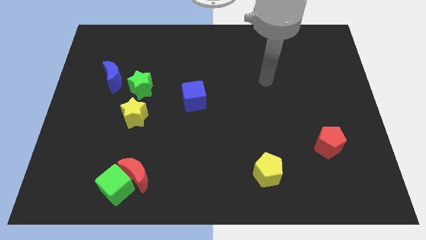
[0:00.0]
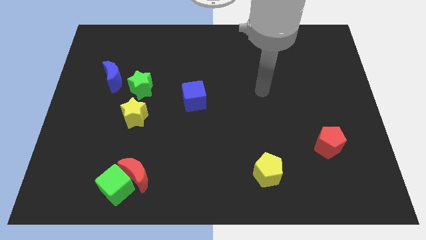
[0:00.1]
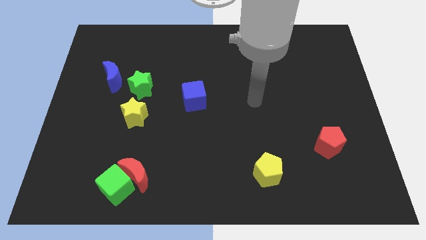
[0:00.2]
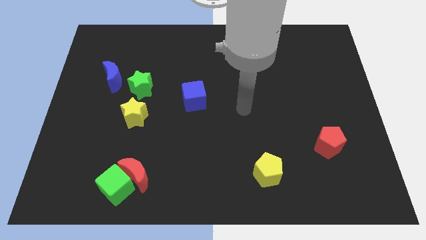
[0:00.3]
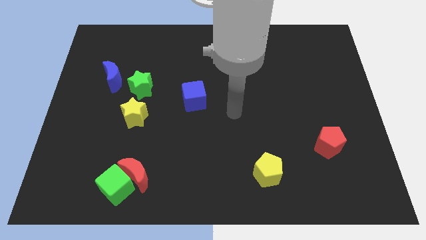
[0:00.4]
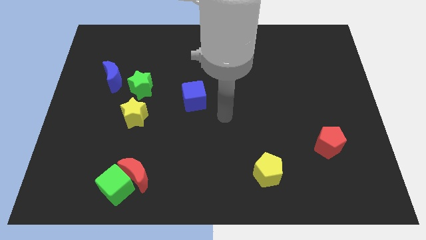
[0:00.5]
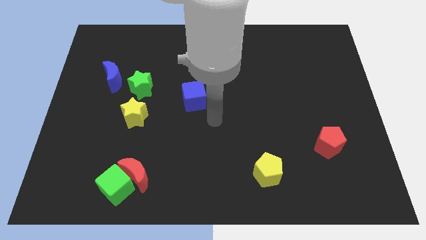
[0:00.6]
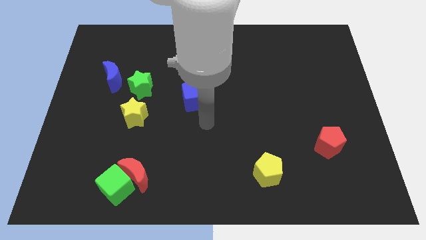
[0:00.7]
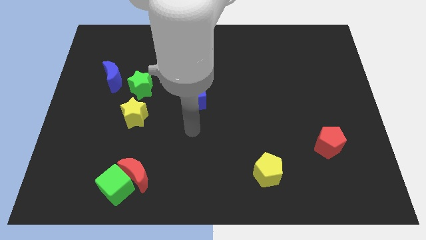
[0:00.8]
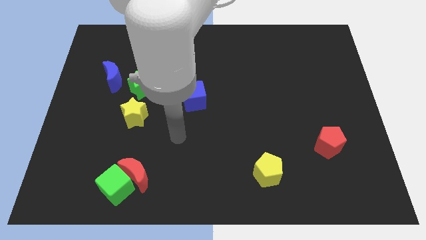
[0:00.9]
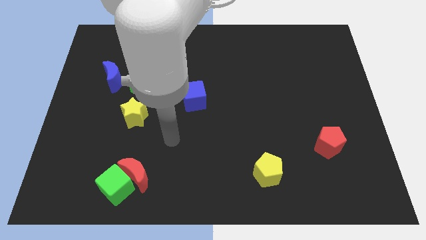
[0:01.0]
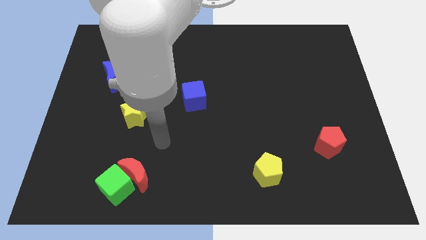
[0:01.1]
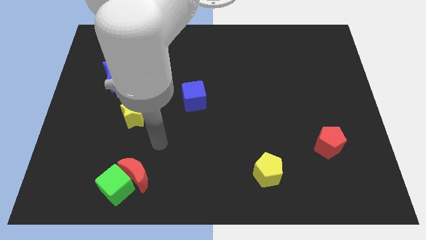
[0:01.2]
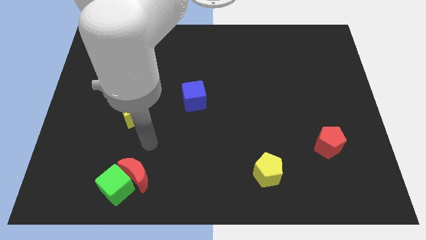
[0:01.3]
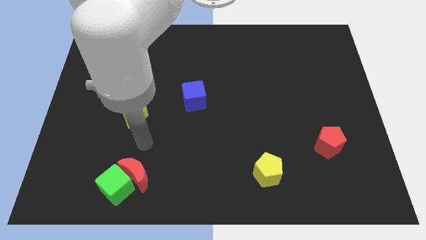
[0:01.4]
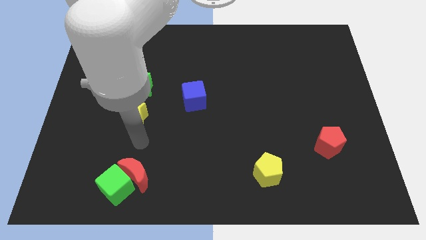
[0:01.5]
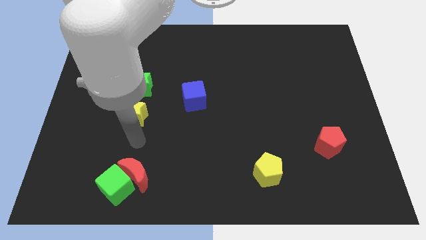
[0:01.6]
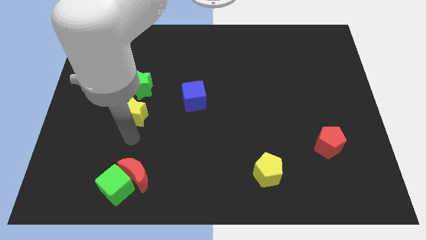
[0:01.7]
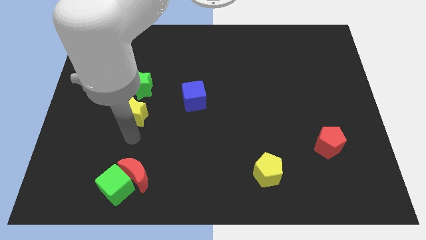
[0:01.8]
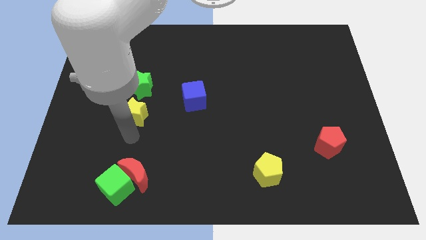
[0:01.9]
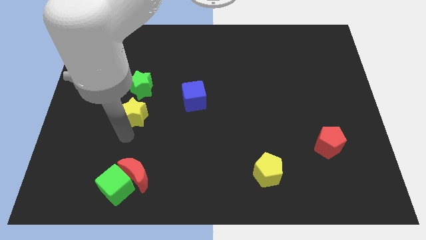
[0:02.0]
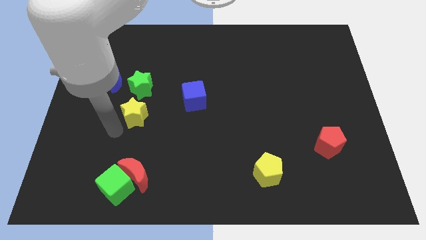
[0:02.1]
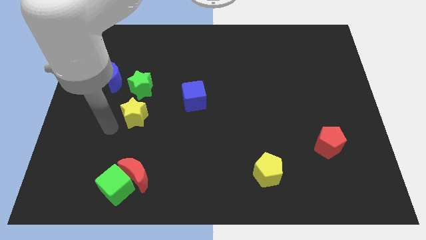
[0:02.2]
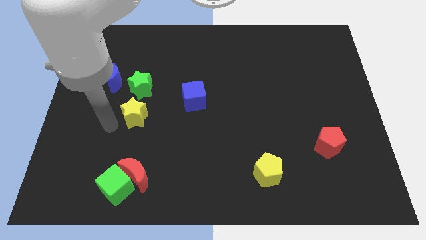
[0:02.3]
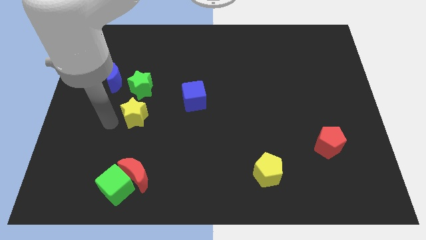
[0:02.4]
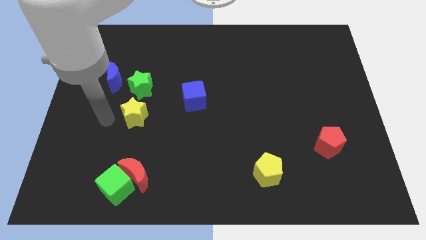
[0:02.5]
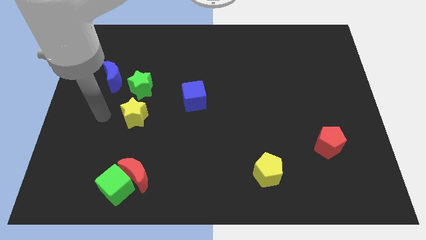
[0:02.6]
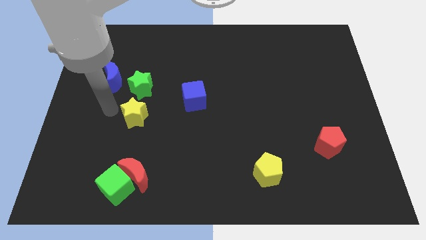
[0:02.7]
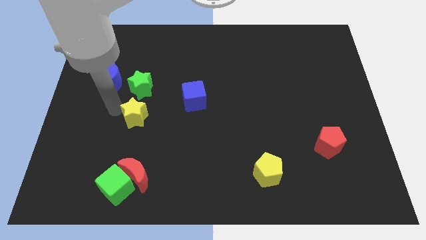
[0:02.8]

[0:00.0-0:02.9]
place the arm left to the yellow star

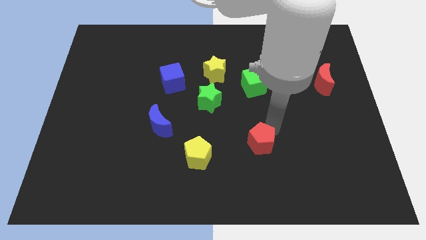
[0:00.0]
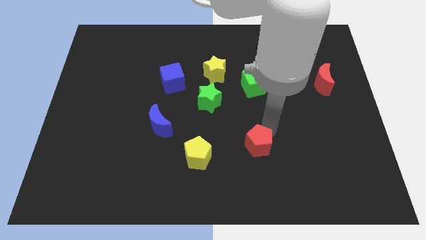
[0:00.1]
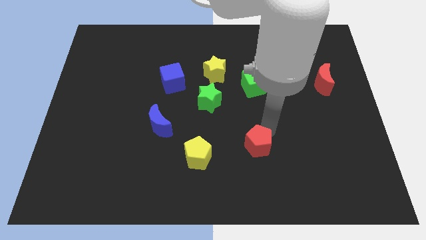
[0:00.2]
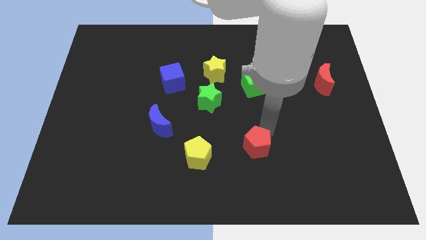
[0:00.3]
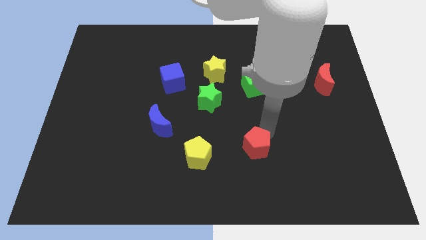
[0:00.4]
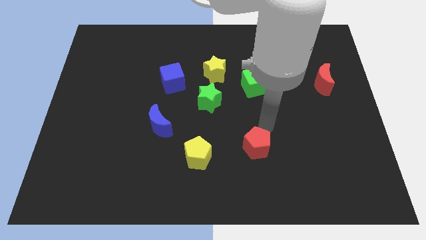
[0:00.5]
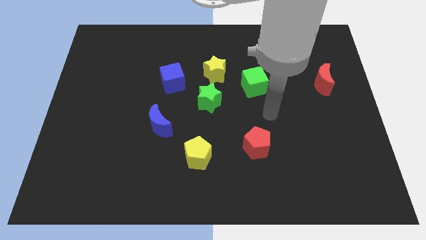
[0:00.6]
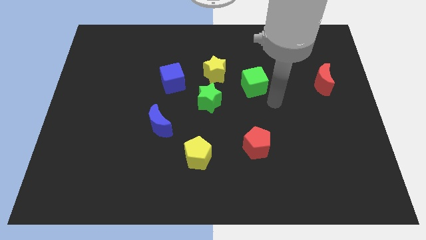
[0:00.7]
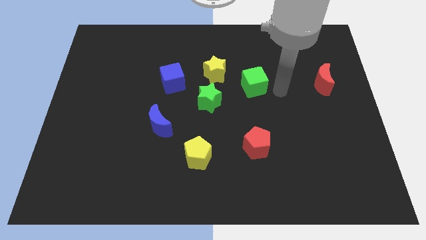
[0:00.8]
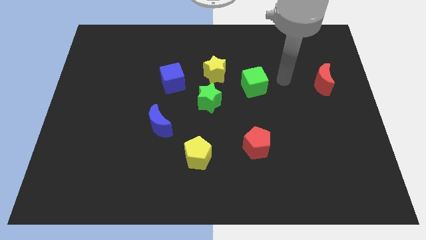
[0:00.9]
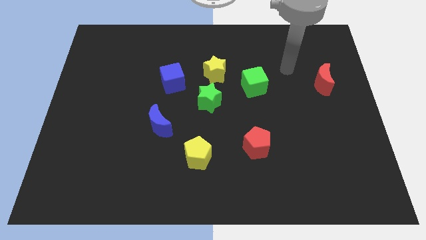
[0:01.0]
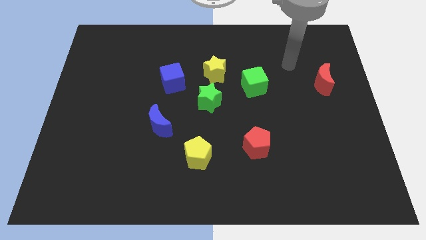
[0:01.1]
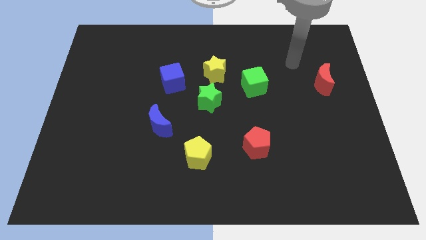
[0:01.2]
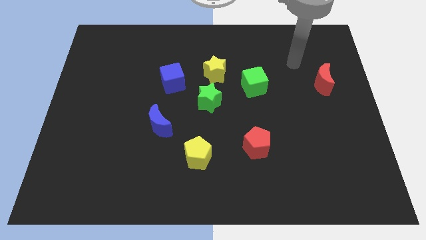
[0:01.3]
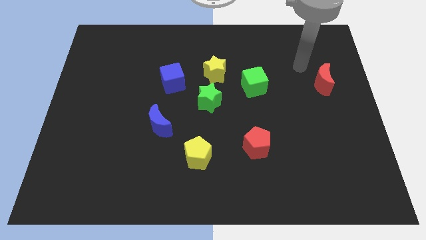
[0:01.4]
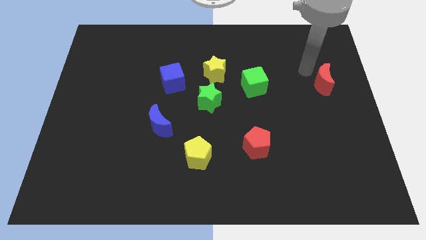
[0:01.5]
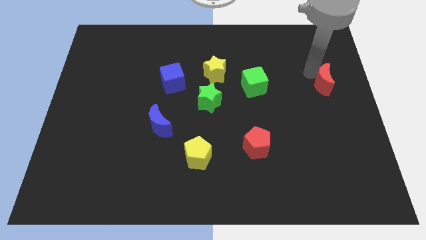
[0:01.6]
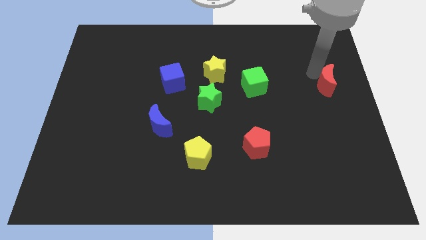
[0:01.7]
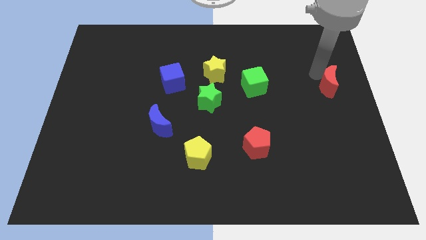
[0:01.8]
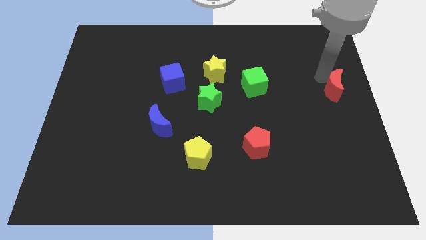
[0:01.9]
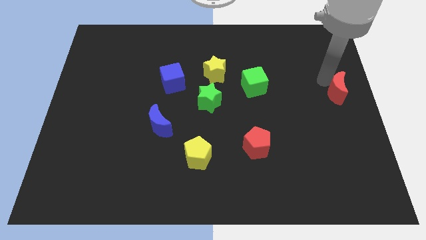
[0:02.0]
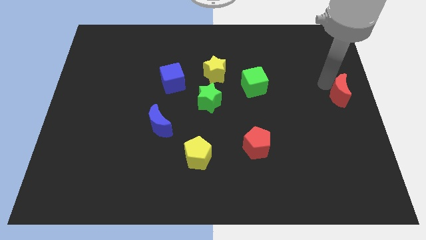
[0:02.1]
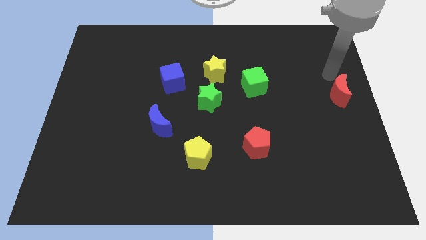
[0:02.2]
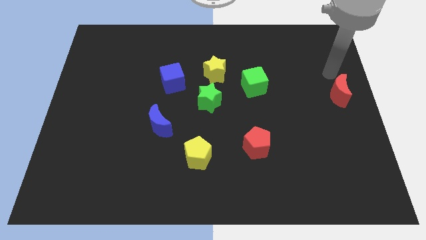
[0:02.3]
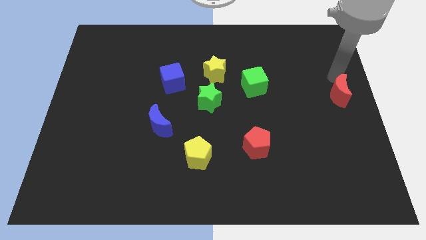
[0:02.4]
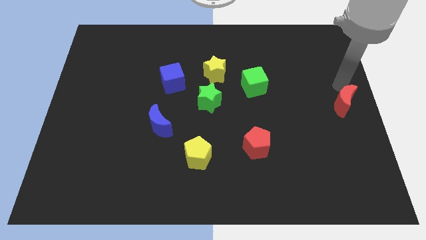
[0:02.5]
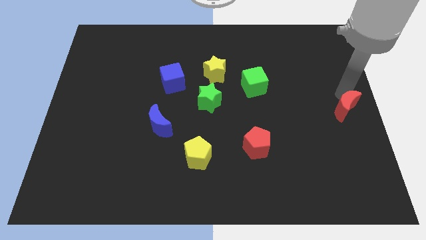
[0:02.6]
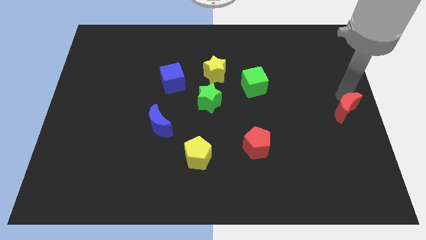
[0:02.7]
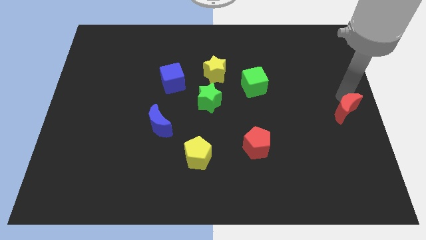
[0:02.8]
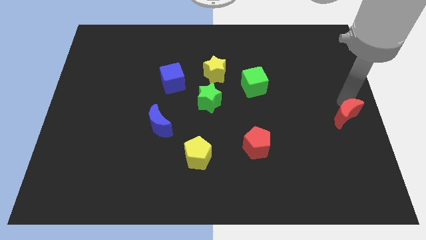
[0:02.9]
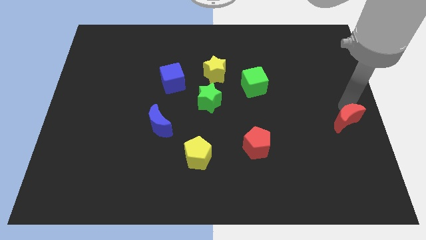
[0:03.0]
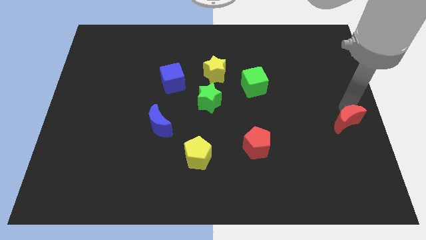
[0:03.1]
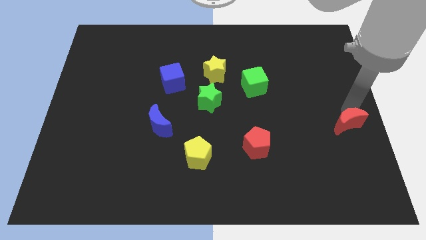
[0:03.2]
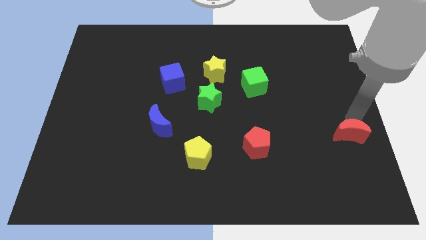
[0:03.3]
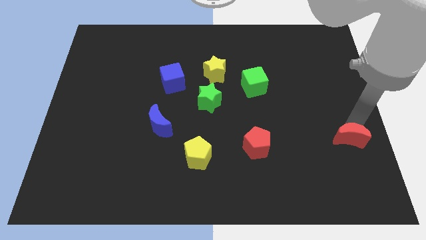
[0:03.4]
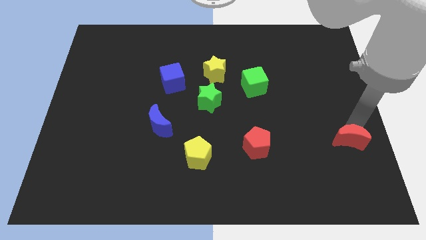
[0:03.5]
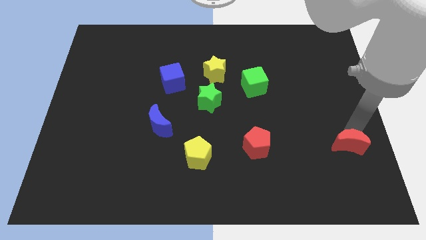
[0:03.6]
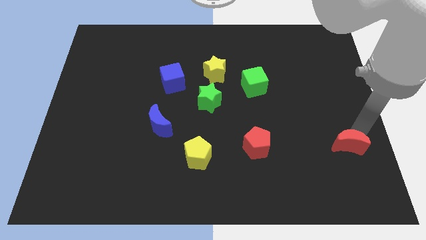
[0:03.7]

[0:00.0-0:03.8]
move the red moon to the right of the red pentagon

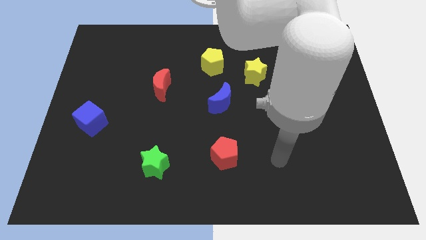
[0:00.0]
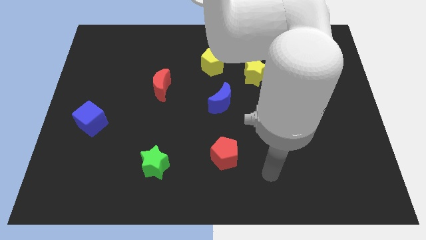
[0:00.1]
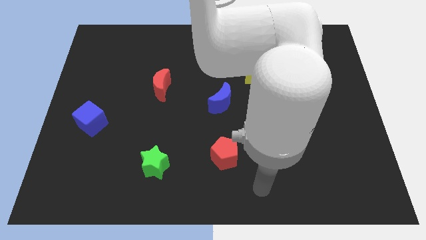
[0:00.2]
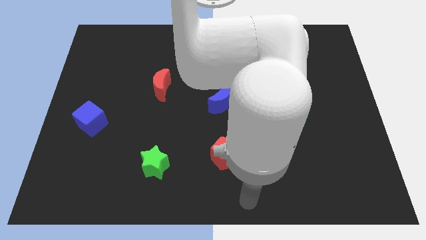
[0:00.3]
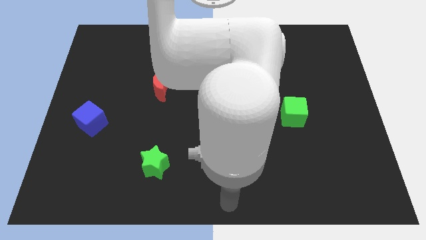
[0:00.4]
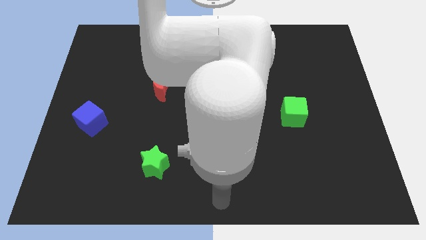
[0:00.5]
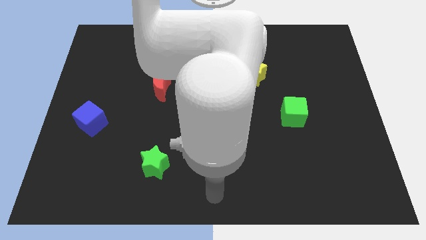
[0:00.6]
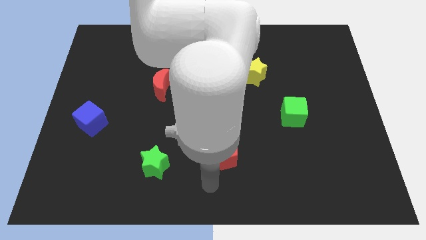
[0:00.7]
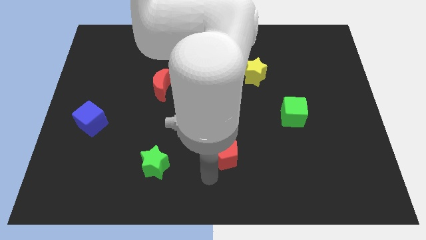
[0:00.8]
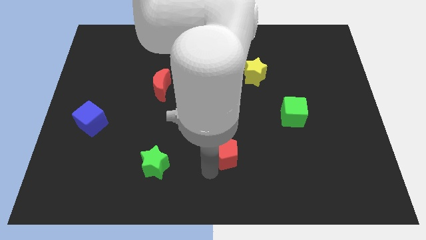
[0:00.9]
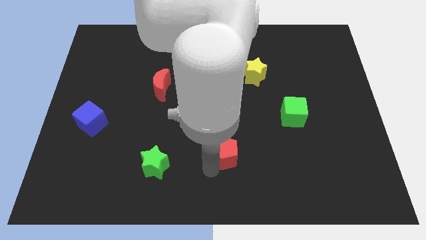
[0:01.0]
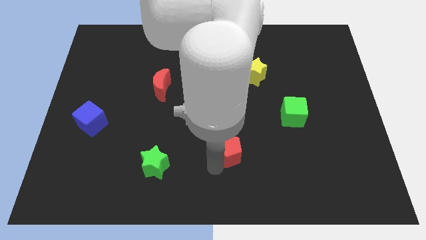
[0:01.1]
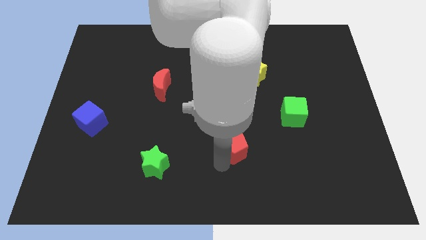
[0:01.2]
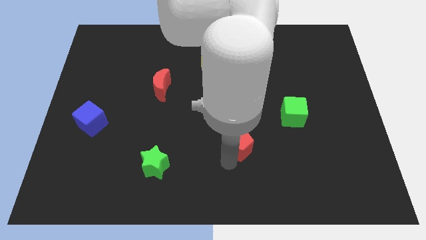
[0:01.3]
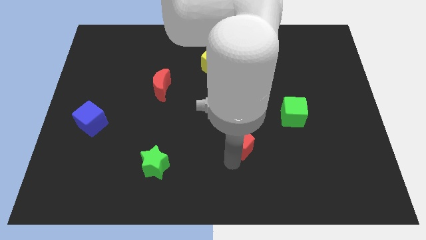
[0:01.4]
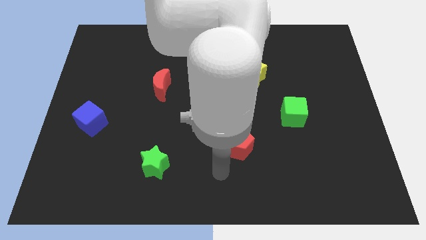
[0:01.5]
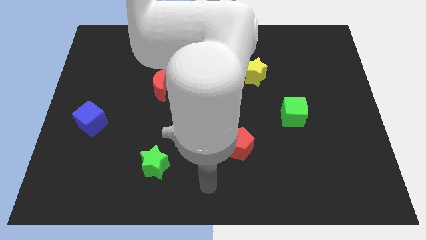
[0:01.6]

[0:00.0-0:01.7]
move the red pentagon diagonal to the green cube

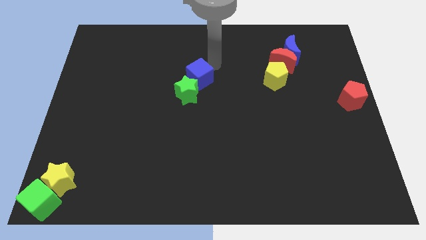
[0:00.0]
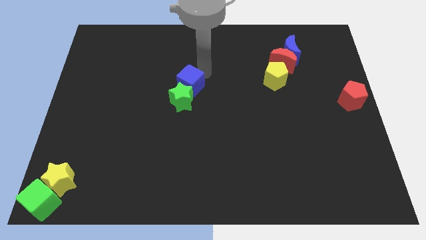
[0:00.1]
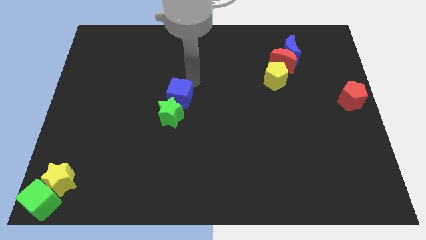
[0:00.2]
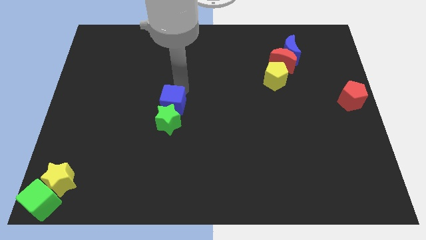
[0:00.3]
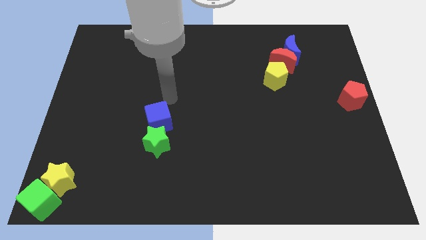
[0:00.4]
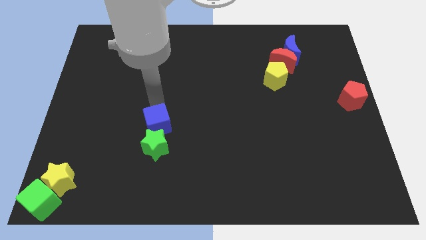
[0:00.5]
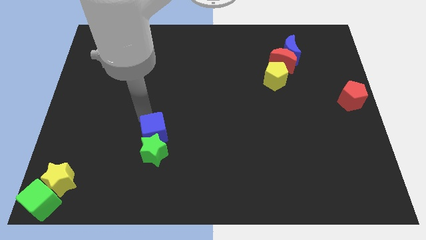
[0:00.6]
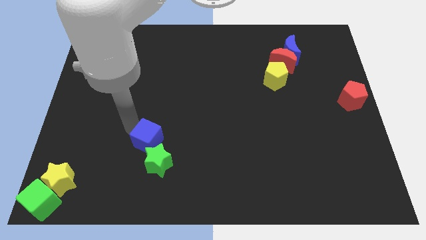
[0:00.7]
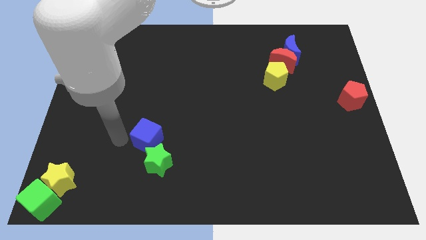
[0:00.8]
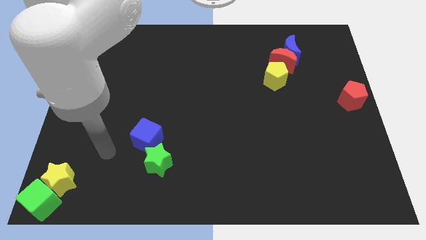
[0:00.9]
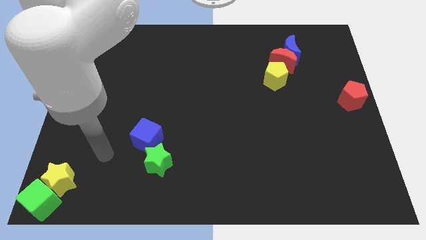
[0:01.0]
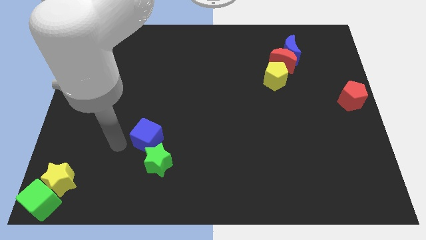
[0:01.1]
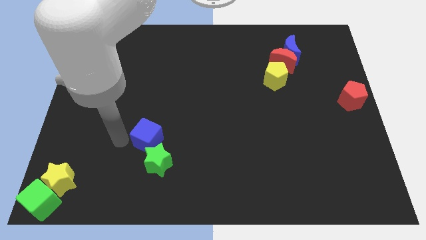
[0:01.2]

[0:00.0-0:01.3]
push green star to the bottom of the board by blue cube
